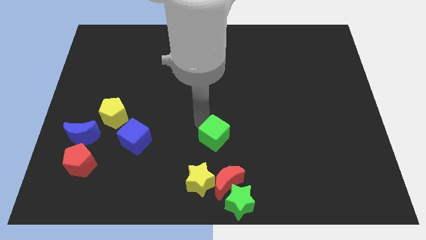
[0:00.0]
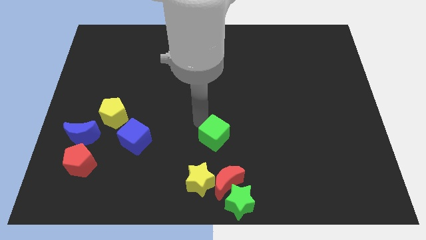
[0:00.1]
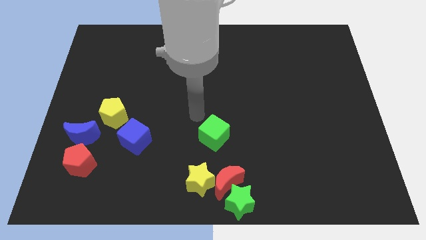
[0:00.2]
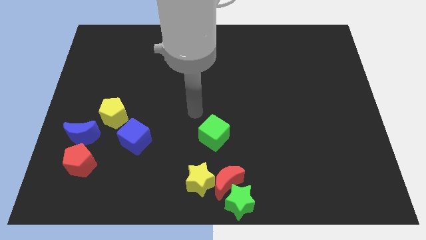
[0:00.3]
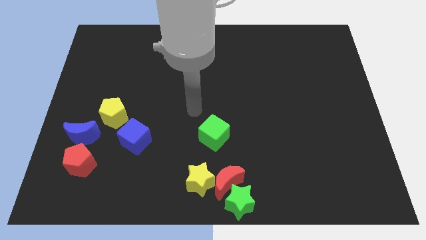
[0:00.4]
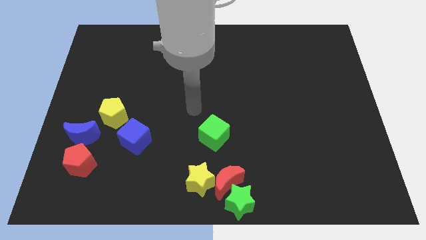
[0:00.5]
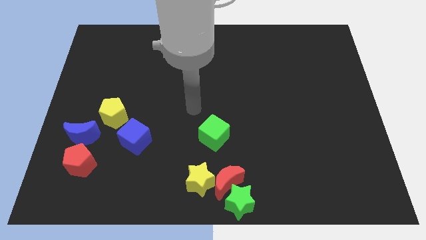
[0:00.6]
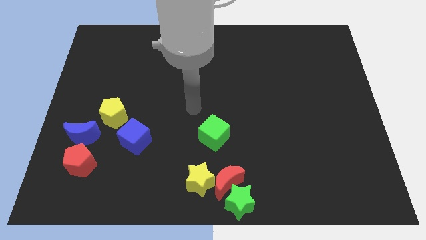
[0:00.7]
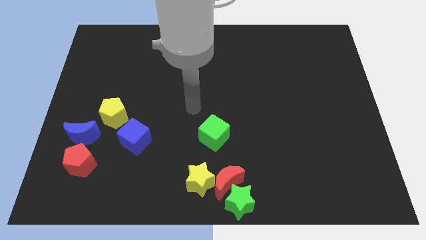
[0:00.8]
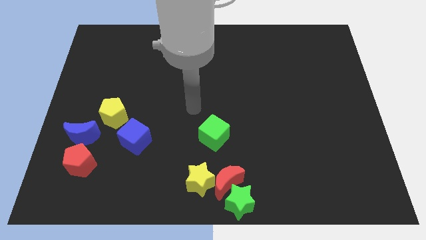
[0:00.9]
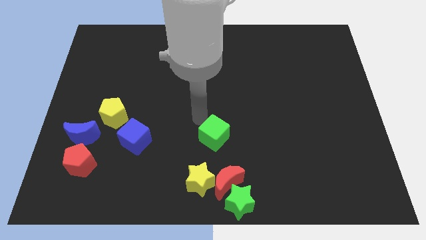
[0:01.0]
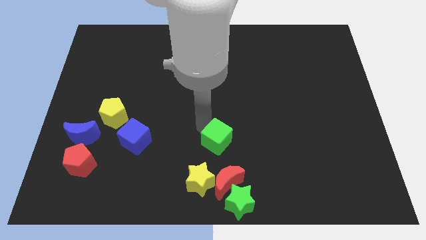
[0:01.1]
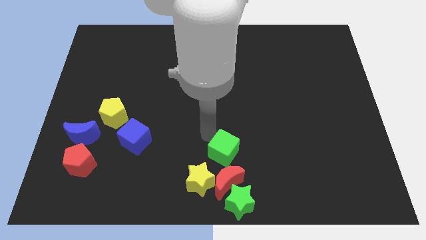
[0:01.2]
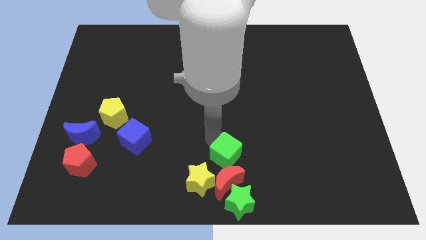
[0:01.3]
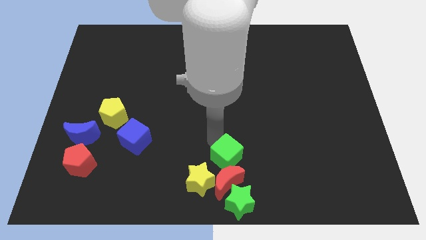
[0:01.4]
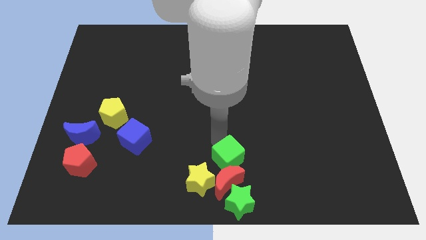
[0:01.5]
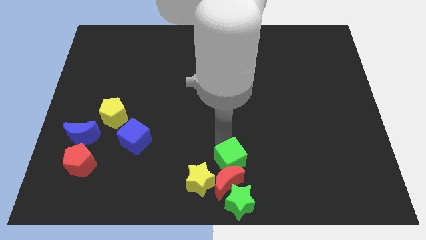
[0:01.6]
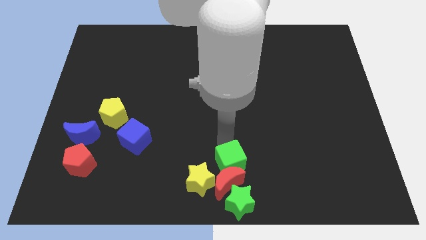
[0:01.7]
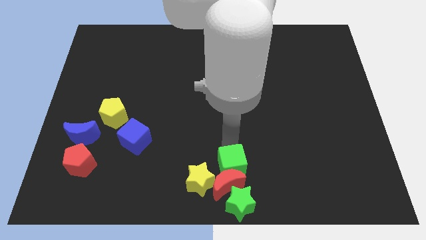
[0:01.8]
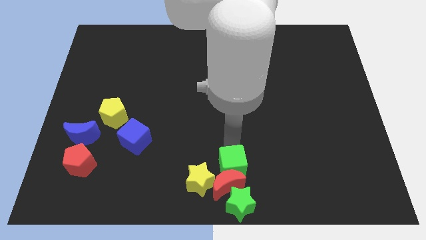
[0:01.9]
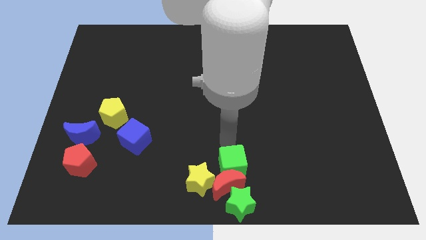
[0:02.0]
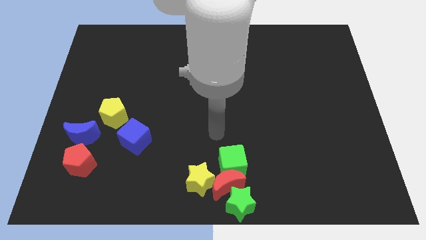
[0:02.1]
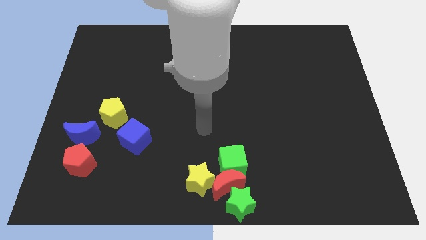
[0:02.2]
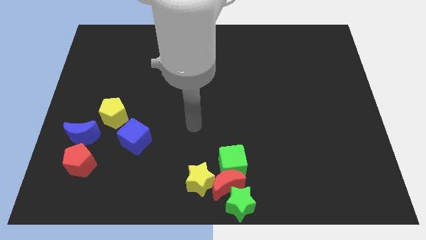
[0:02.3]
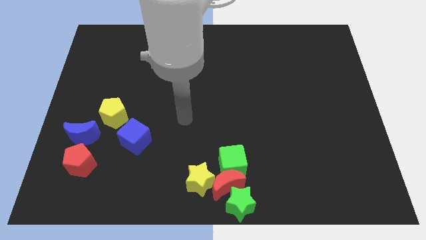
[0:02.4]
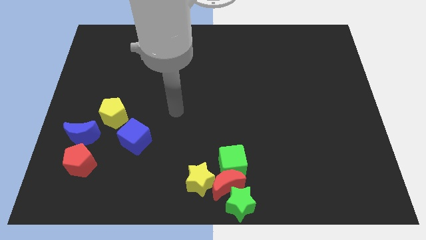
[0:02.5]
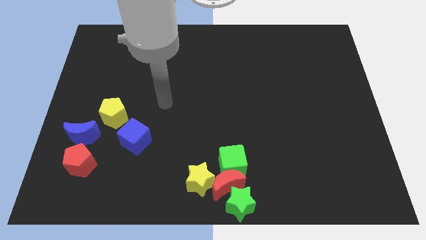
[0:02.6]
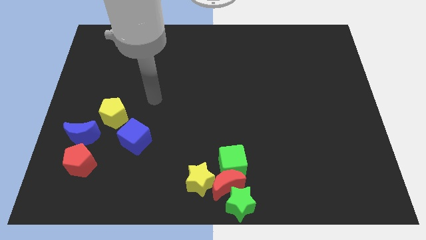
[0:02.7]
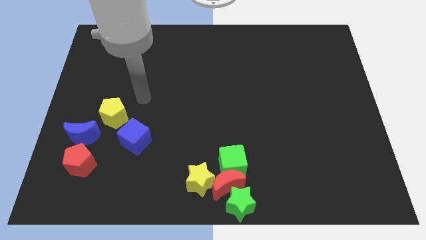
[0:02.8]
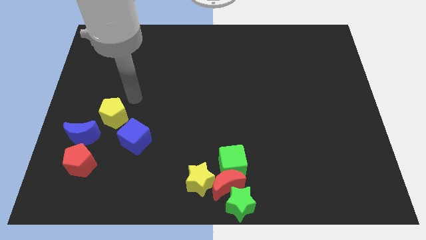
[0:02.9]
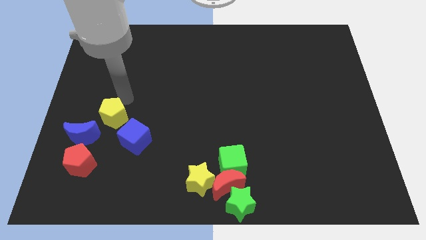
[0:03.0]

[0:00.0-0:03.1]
place the green cube at the top of the red crescent

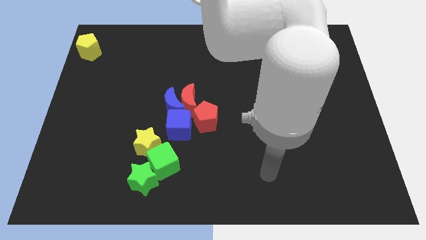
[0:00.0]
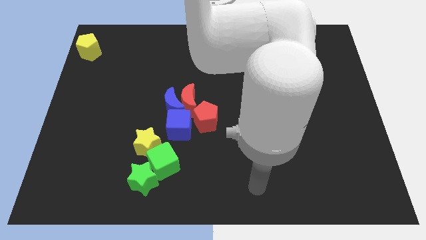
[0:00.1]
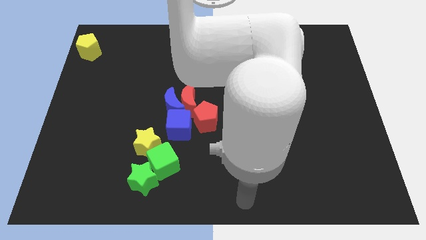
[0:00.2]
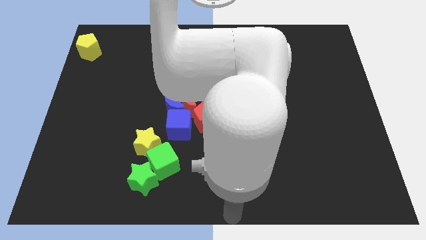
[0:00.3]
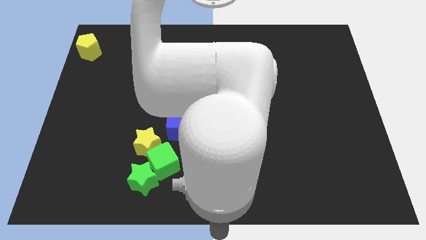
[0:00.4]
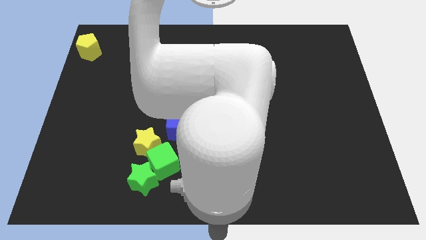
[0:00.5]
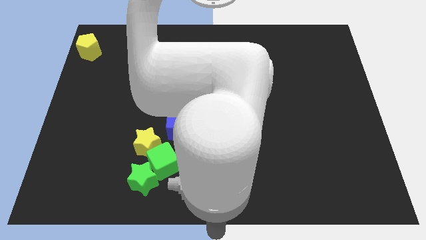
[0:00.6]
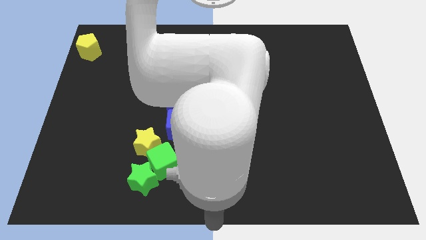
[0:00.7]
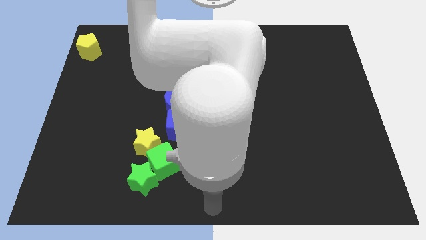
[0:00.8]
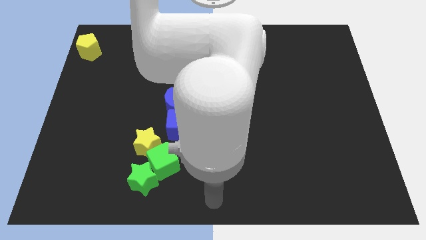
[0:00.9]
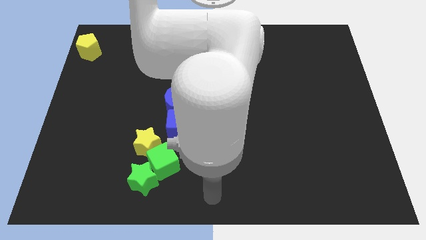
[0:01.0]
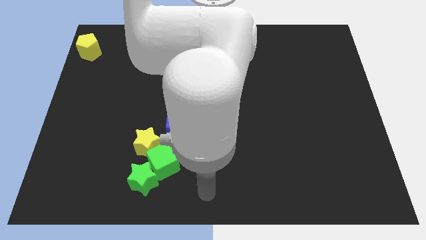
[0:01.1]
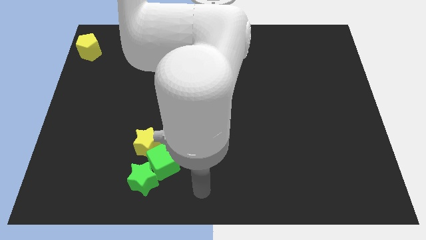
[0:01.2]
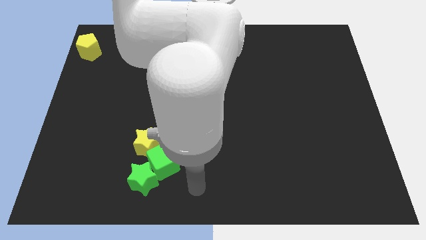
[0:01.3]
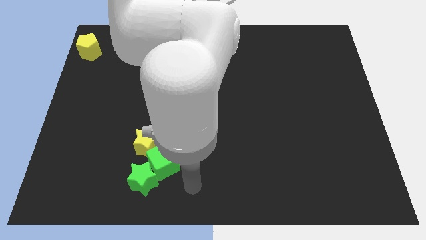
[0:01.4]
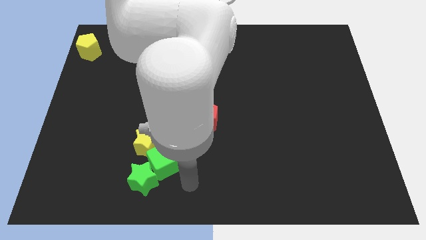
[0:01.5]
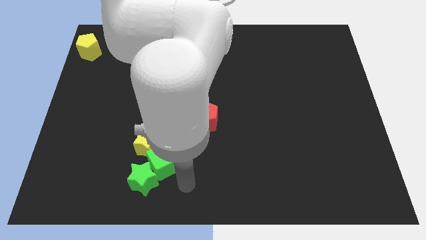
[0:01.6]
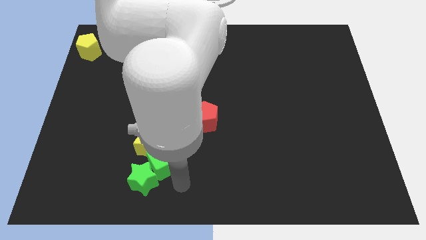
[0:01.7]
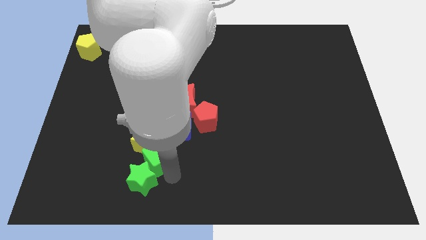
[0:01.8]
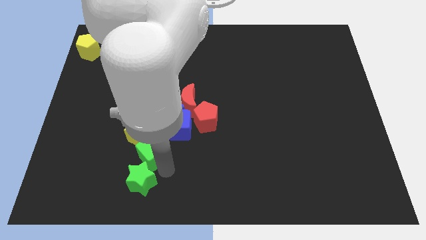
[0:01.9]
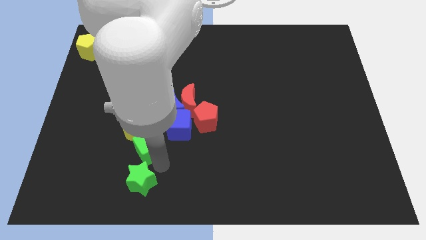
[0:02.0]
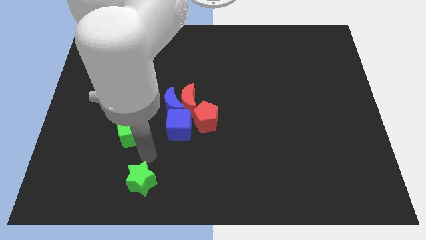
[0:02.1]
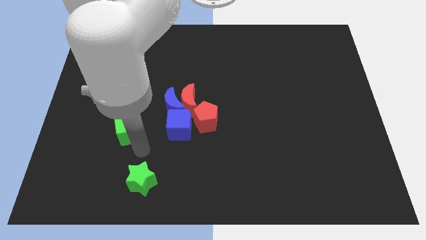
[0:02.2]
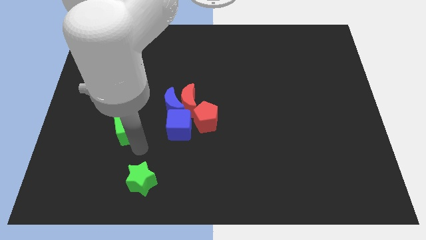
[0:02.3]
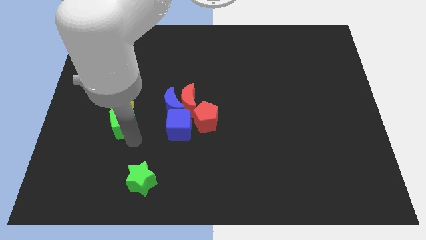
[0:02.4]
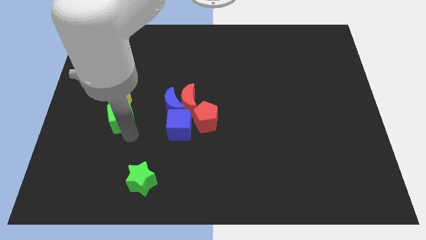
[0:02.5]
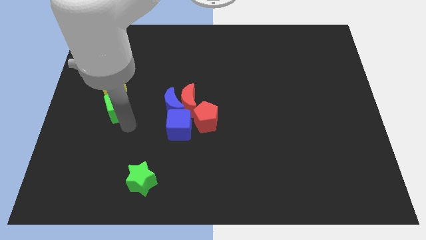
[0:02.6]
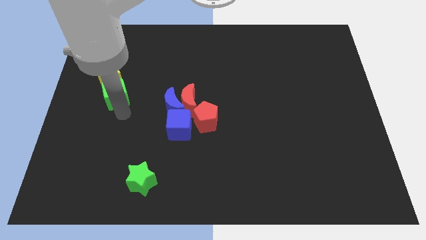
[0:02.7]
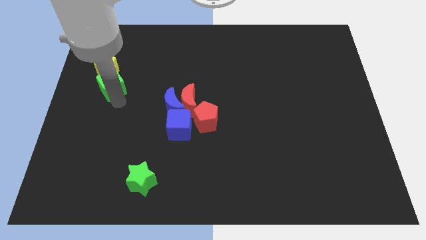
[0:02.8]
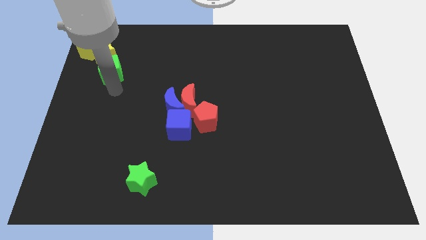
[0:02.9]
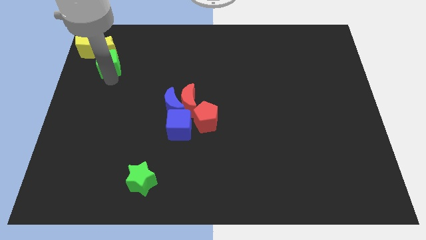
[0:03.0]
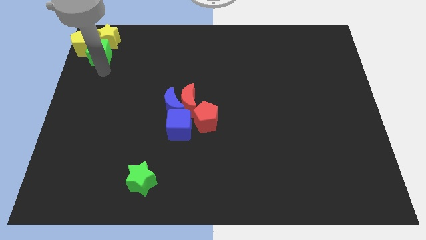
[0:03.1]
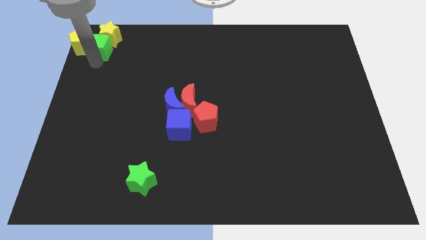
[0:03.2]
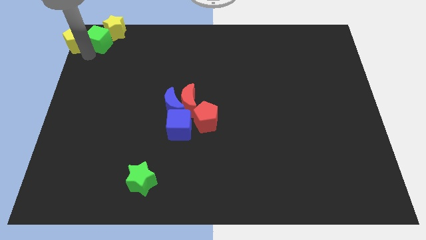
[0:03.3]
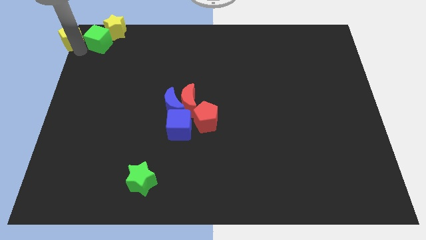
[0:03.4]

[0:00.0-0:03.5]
push green cube and yellow star towards yellow pentagon at the top left

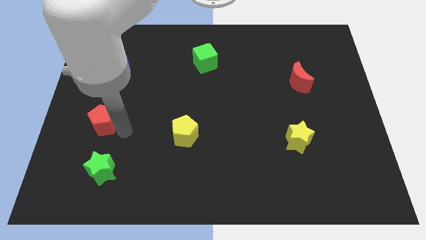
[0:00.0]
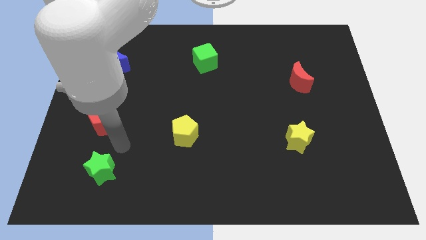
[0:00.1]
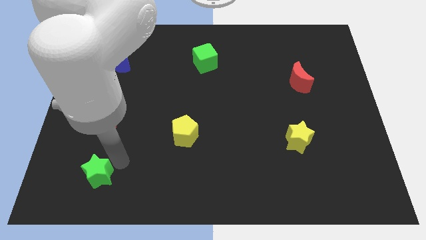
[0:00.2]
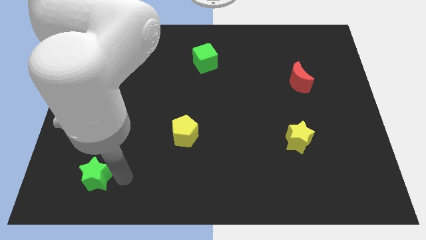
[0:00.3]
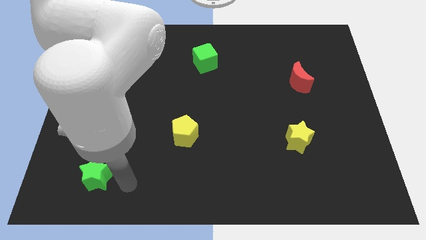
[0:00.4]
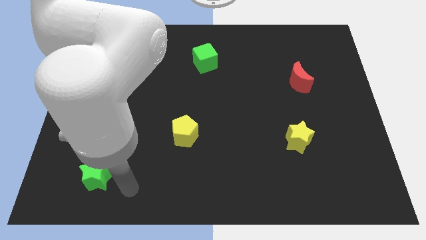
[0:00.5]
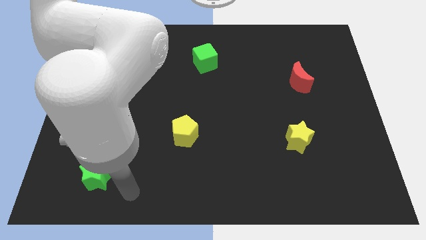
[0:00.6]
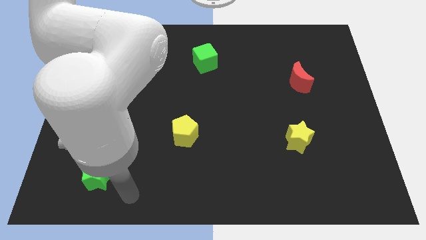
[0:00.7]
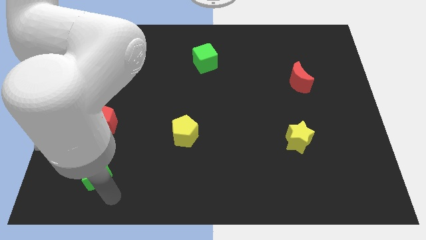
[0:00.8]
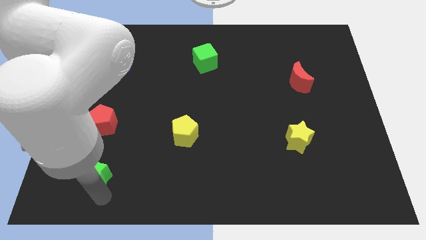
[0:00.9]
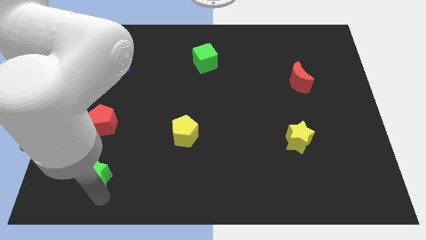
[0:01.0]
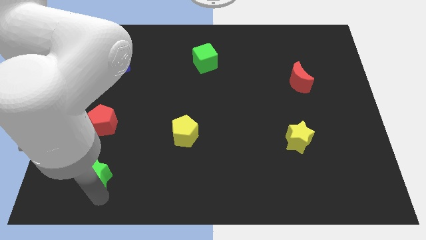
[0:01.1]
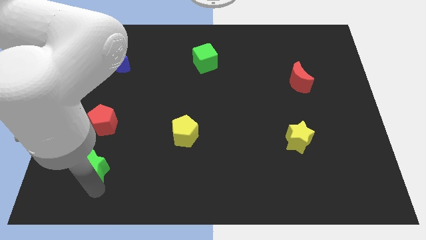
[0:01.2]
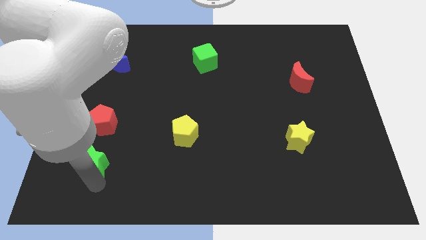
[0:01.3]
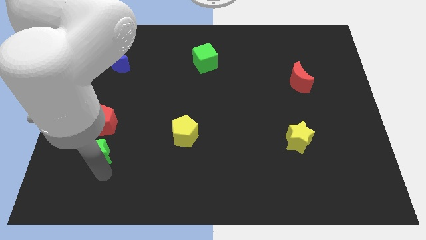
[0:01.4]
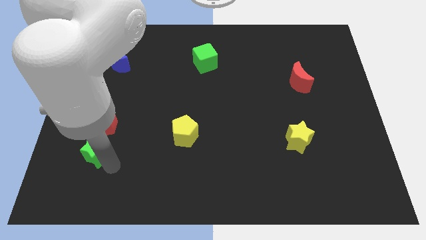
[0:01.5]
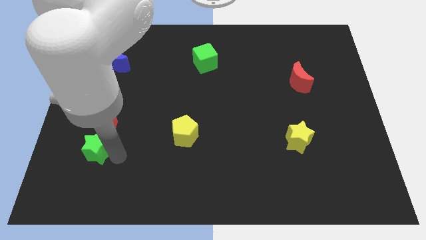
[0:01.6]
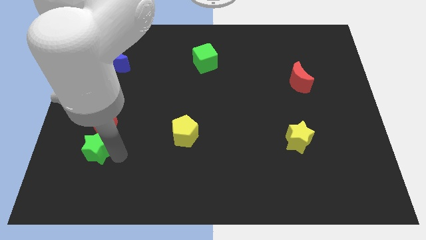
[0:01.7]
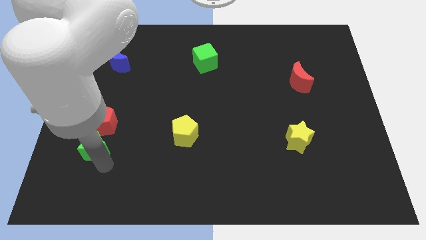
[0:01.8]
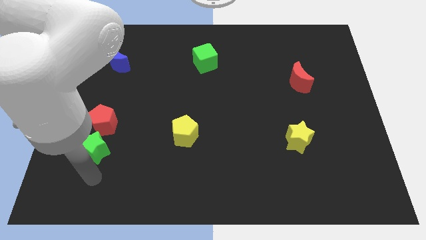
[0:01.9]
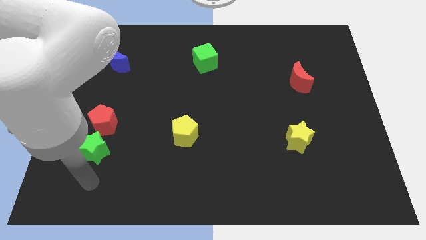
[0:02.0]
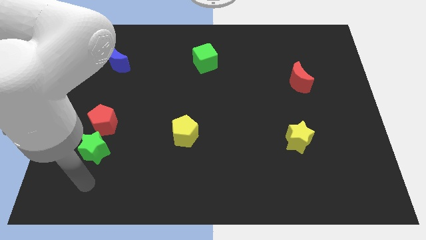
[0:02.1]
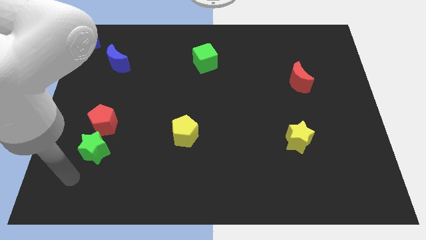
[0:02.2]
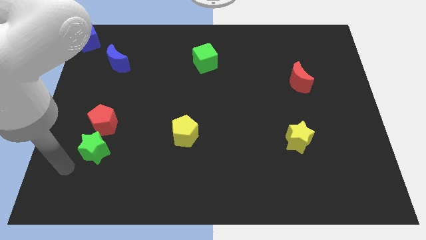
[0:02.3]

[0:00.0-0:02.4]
move the green star close to the red pentagon

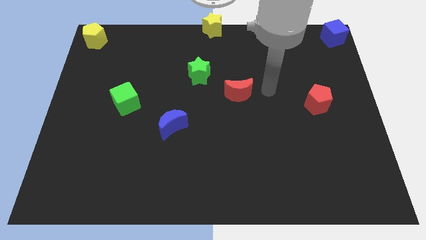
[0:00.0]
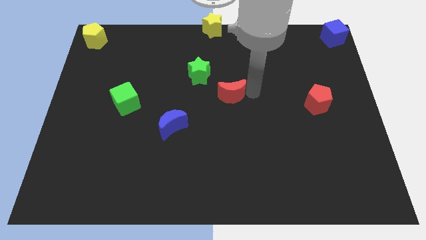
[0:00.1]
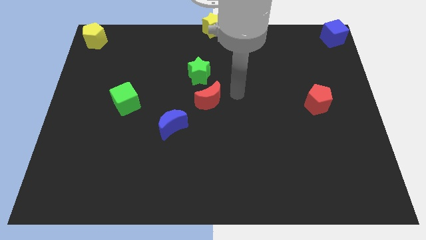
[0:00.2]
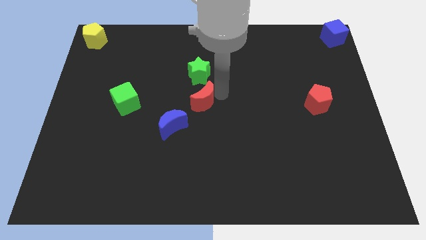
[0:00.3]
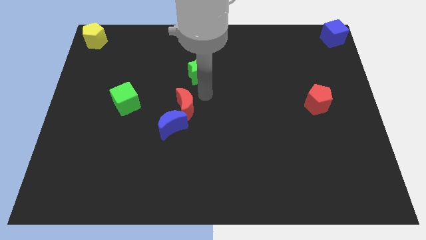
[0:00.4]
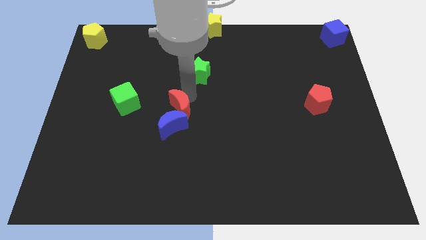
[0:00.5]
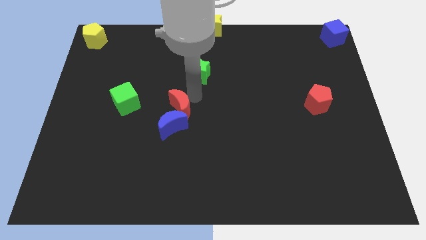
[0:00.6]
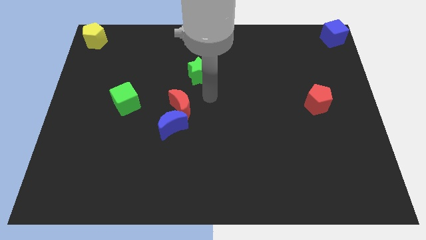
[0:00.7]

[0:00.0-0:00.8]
move the red crescent into the blue crescent
